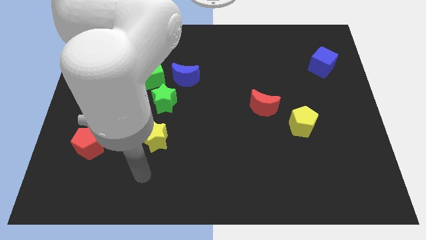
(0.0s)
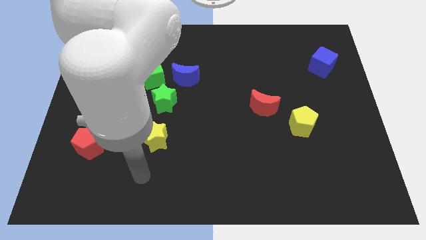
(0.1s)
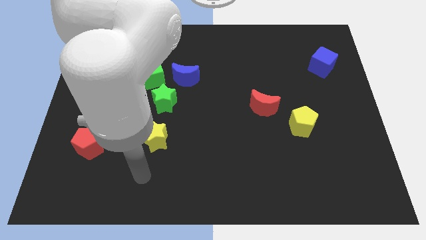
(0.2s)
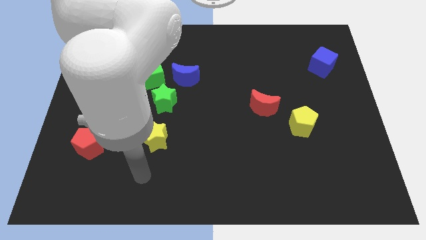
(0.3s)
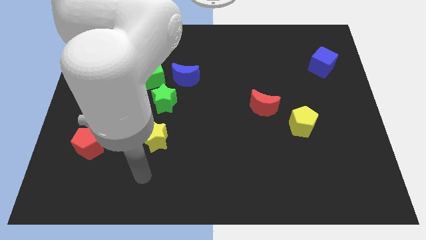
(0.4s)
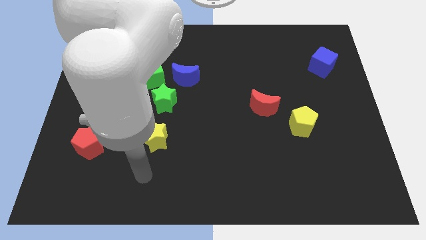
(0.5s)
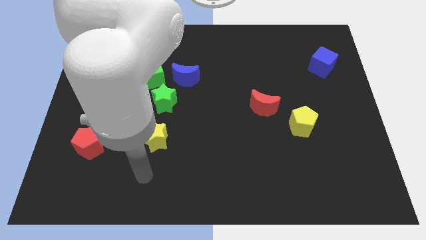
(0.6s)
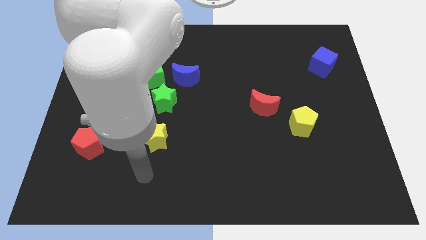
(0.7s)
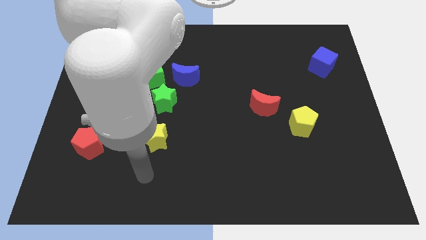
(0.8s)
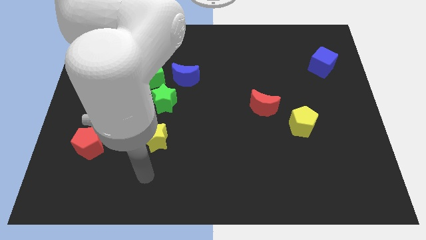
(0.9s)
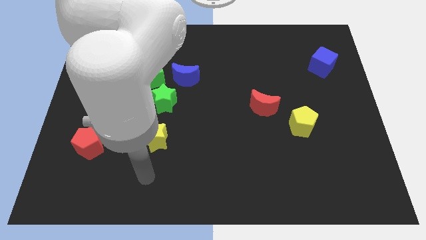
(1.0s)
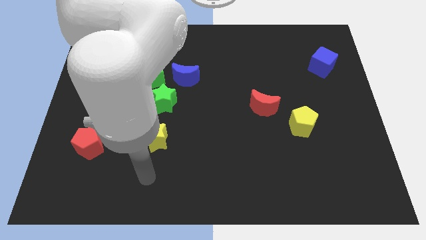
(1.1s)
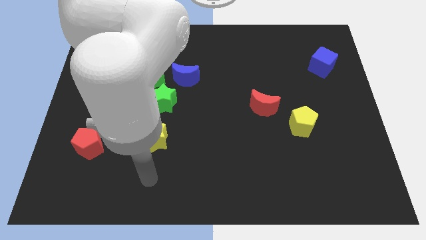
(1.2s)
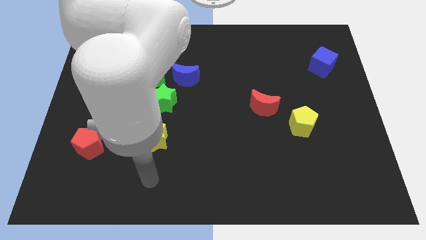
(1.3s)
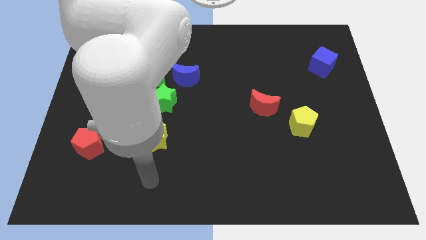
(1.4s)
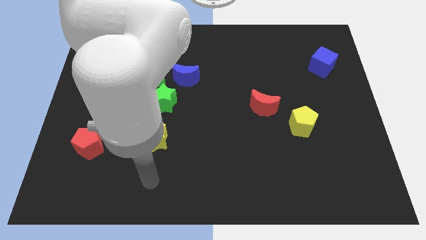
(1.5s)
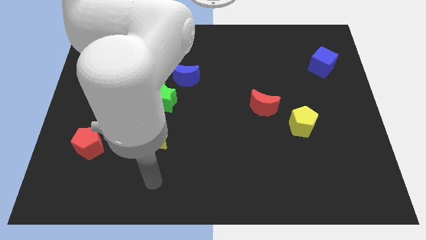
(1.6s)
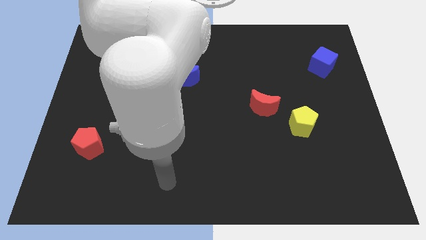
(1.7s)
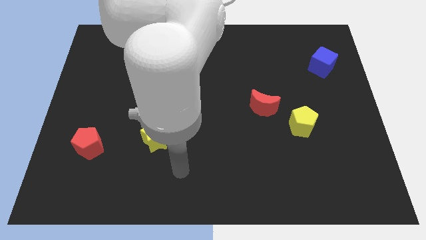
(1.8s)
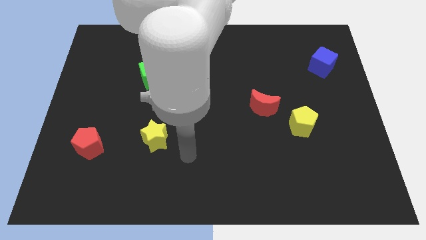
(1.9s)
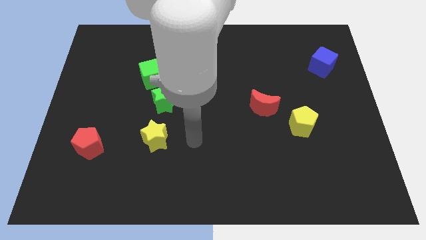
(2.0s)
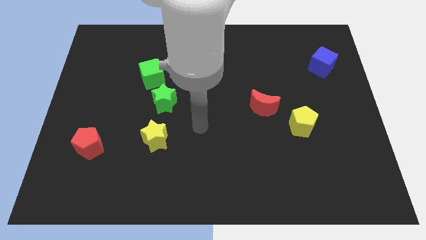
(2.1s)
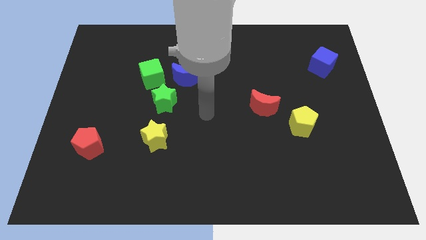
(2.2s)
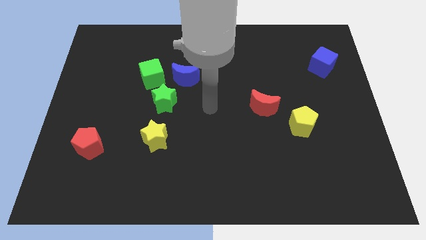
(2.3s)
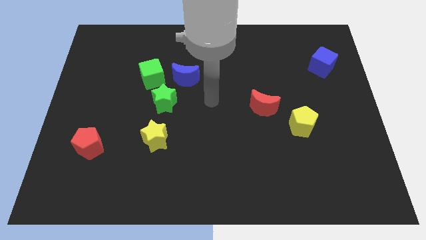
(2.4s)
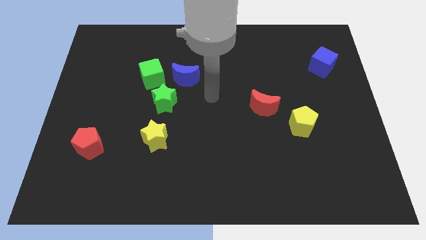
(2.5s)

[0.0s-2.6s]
place your arm at the center of the board

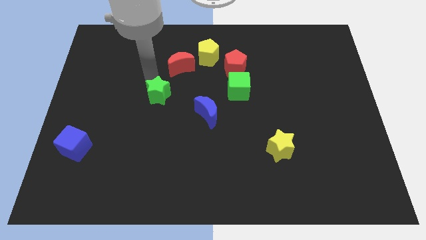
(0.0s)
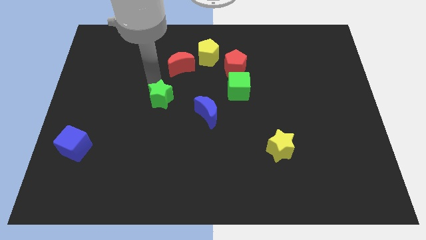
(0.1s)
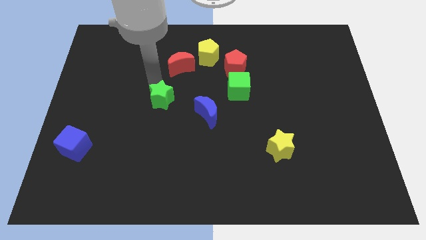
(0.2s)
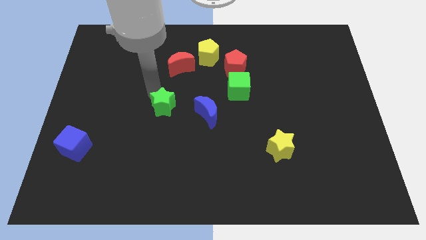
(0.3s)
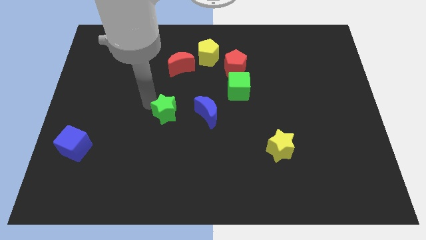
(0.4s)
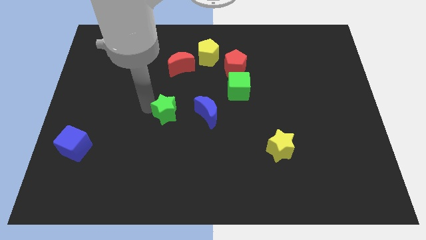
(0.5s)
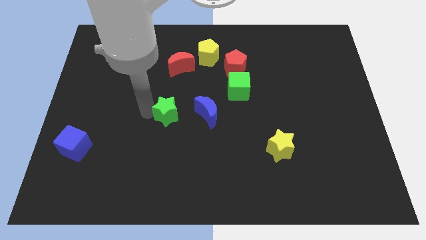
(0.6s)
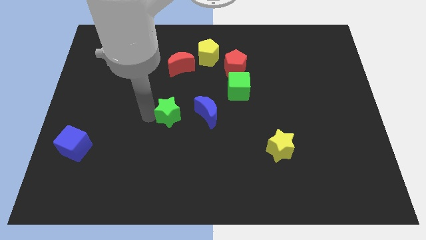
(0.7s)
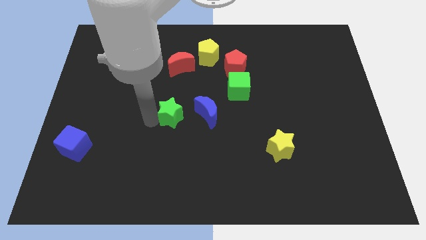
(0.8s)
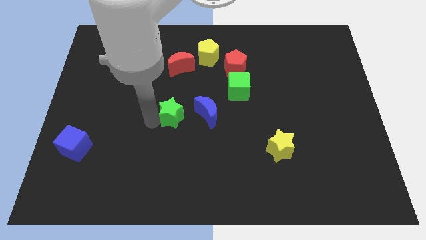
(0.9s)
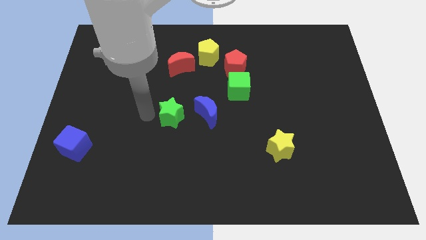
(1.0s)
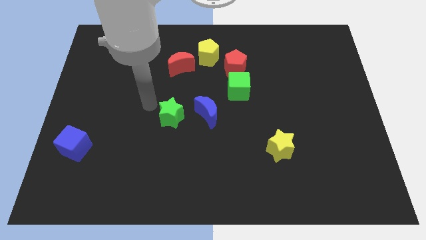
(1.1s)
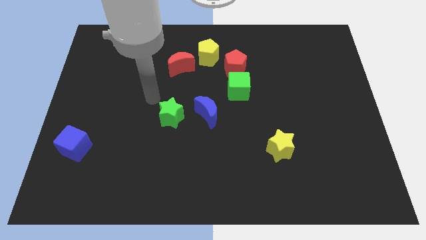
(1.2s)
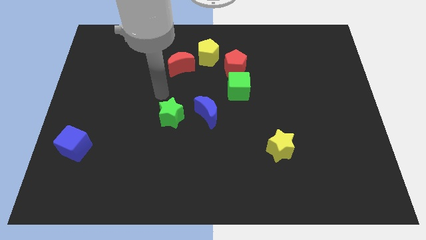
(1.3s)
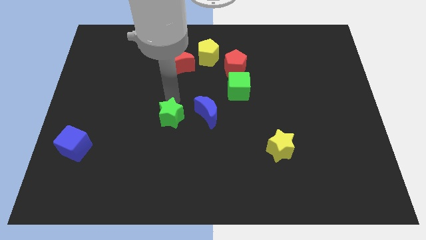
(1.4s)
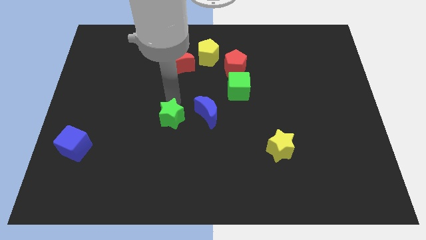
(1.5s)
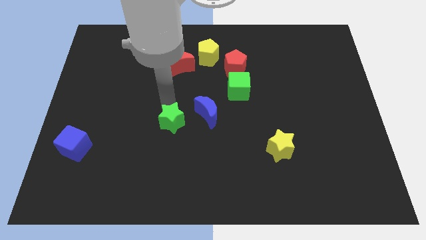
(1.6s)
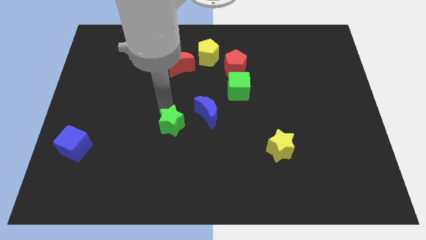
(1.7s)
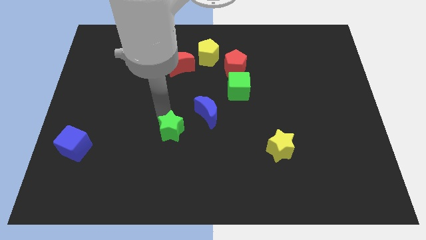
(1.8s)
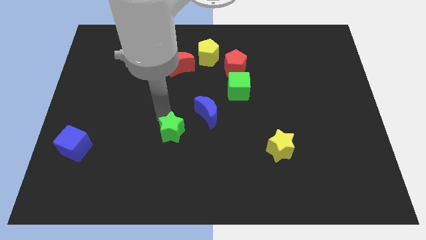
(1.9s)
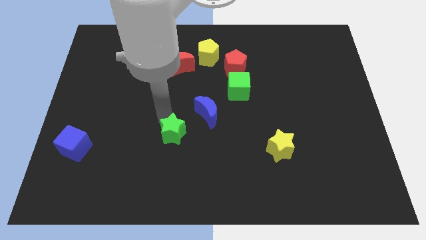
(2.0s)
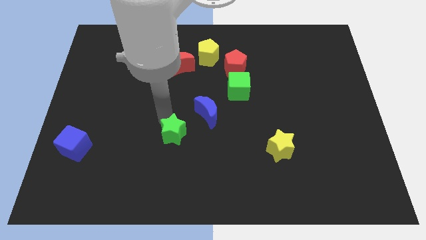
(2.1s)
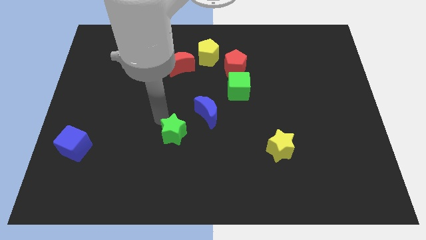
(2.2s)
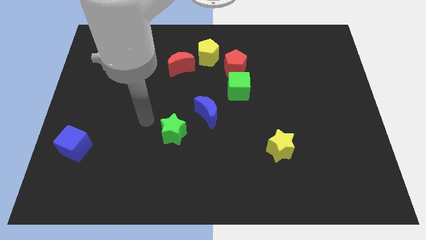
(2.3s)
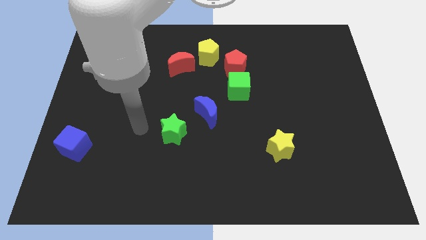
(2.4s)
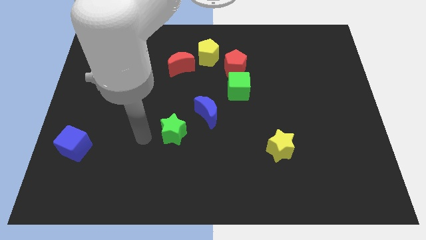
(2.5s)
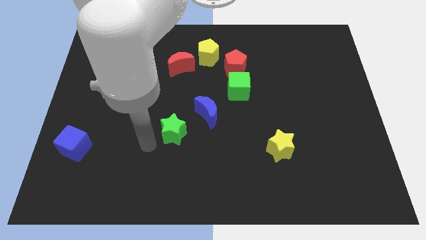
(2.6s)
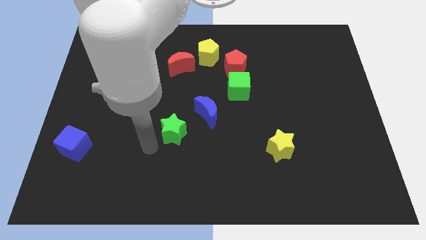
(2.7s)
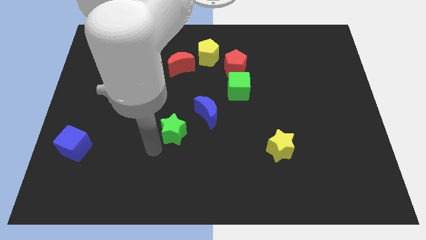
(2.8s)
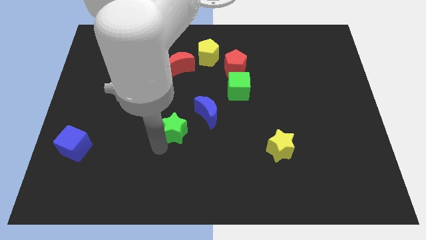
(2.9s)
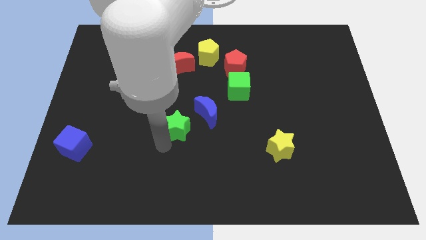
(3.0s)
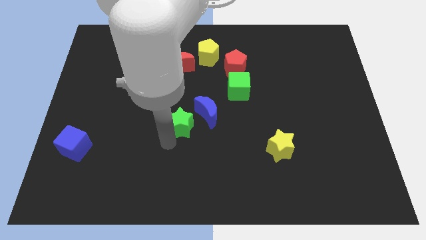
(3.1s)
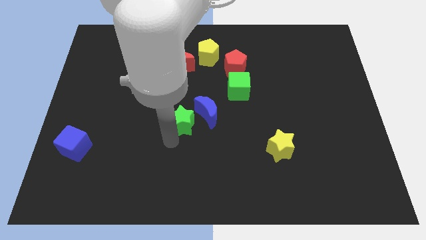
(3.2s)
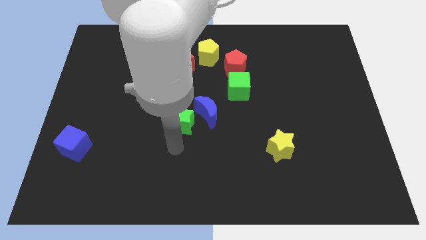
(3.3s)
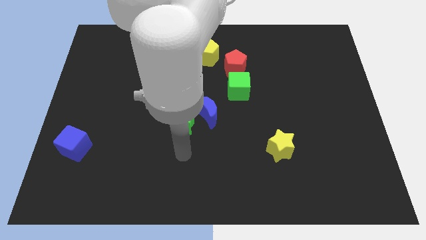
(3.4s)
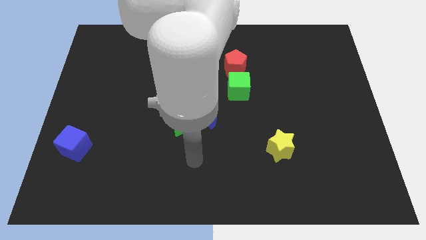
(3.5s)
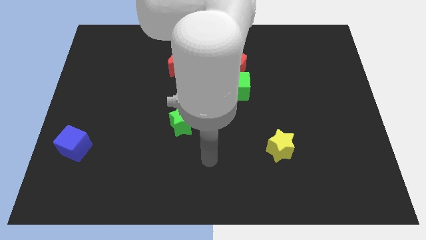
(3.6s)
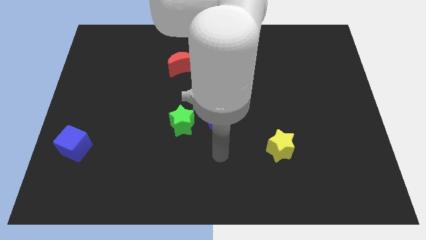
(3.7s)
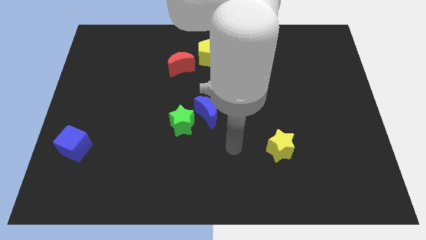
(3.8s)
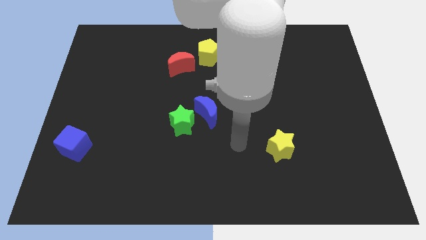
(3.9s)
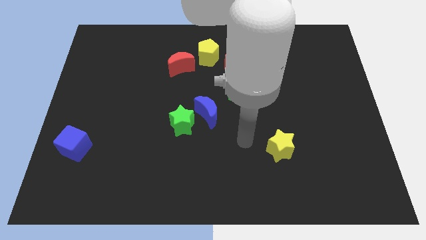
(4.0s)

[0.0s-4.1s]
move the green star to the bottom left of the blue cube

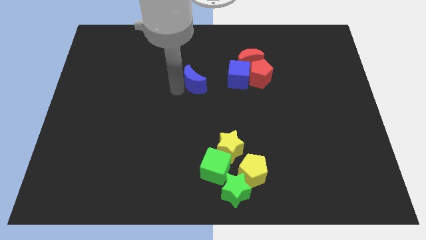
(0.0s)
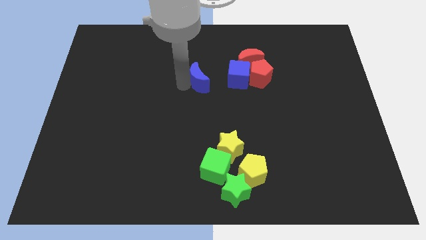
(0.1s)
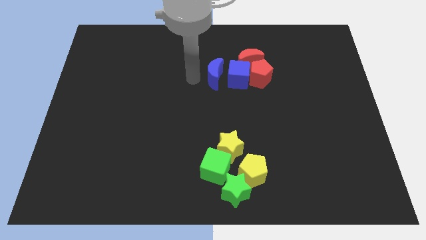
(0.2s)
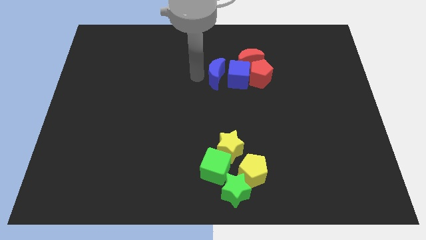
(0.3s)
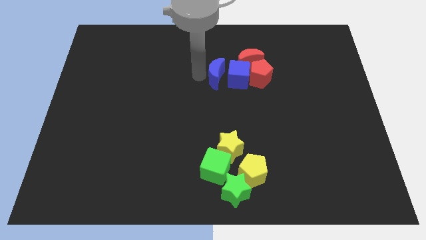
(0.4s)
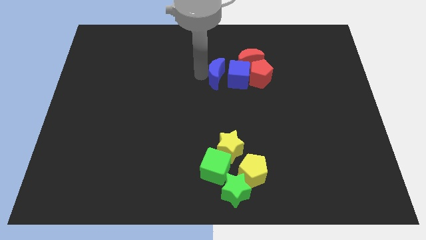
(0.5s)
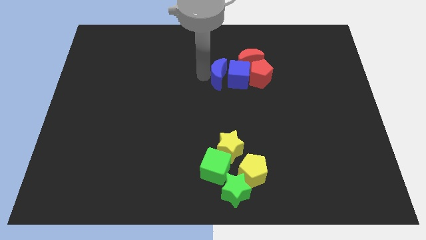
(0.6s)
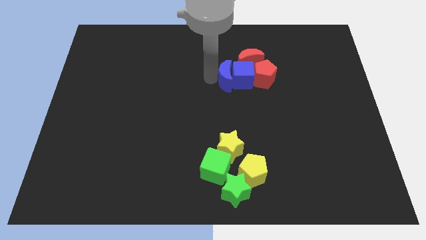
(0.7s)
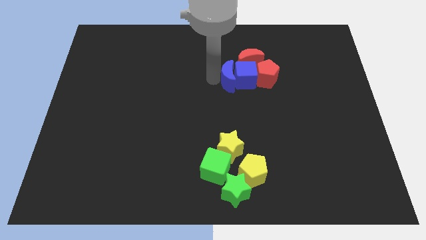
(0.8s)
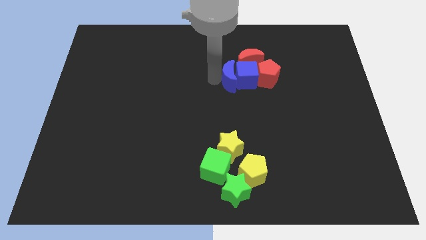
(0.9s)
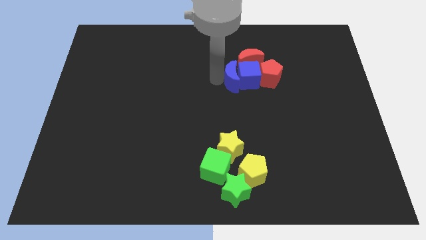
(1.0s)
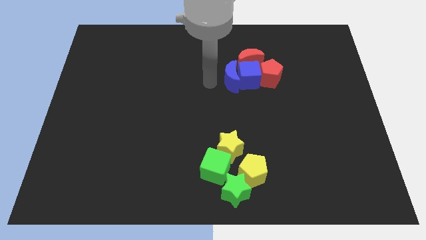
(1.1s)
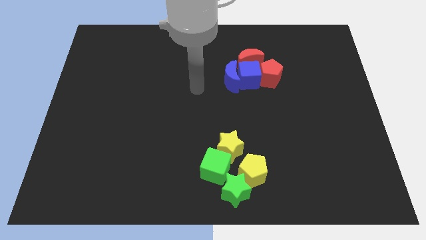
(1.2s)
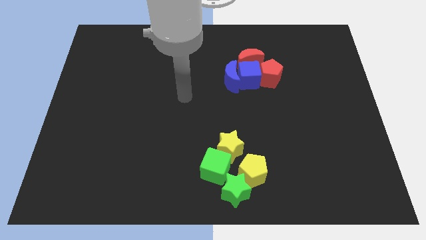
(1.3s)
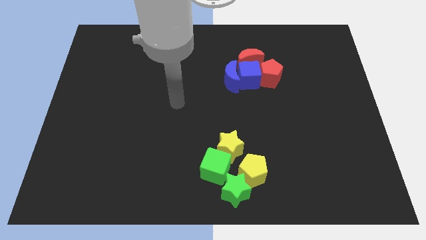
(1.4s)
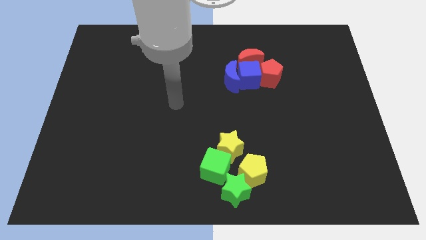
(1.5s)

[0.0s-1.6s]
push the blue moon to the group of blocks

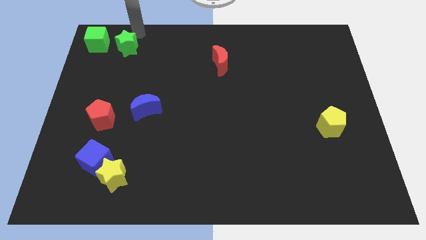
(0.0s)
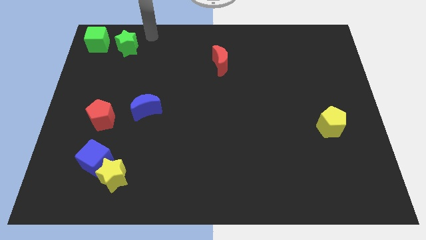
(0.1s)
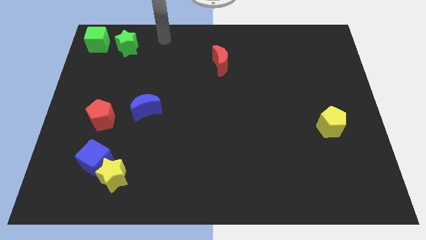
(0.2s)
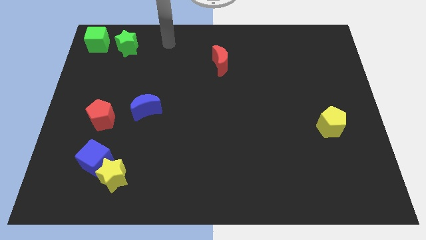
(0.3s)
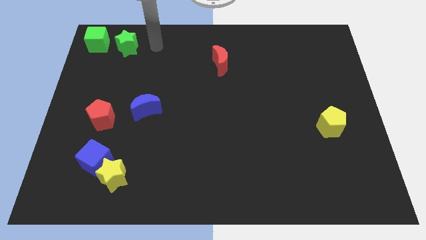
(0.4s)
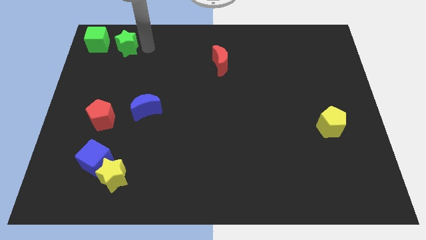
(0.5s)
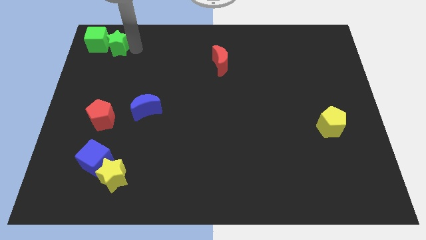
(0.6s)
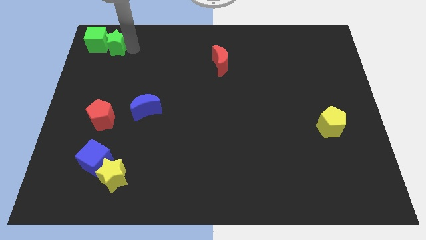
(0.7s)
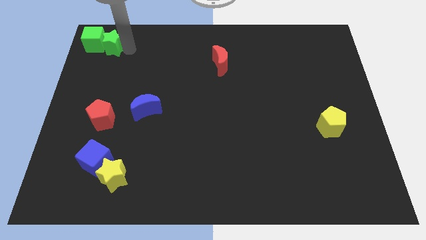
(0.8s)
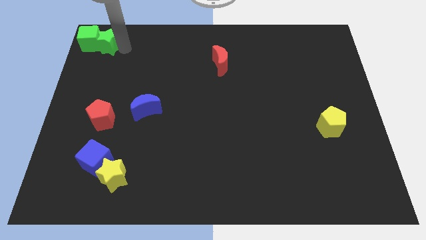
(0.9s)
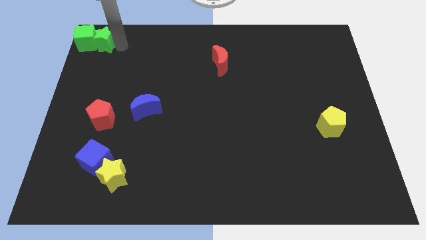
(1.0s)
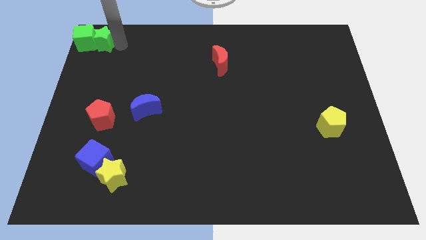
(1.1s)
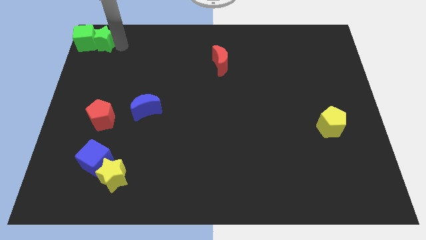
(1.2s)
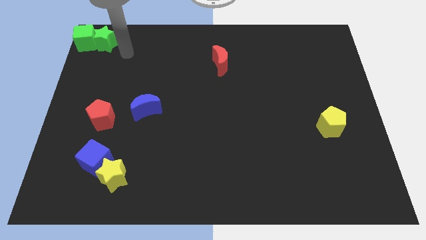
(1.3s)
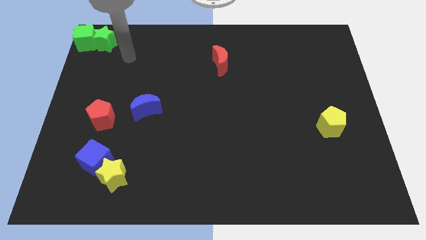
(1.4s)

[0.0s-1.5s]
slide the green star into the green cube
